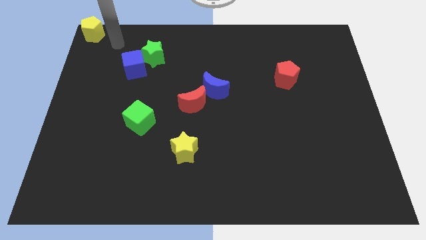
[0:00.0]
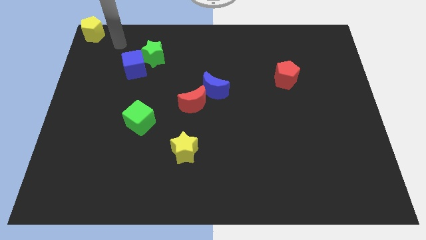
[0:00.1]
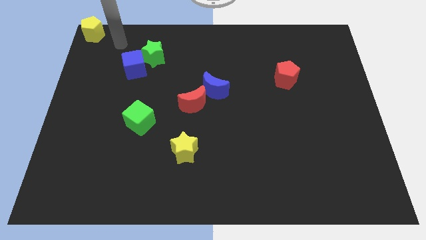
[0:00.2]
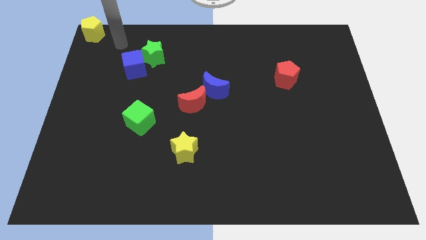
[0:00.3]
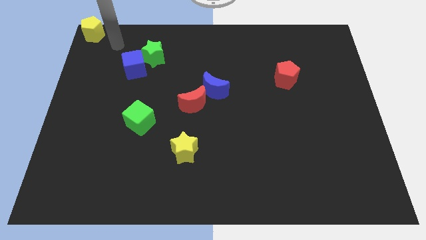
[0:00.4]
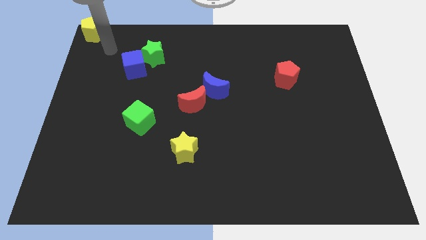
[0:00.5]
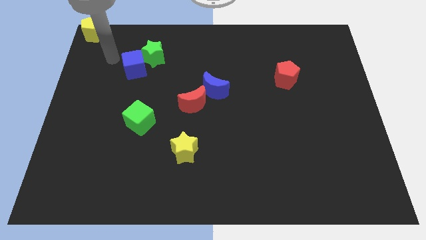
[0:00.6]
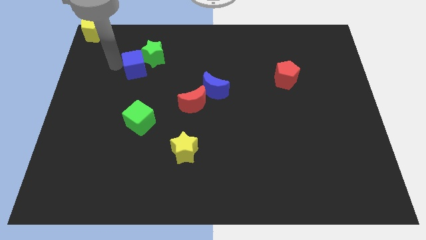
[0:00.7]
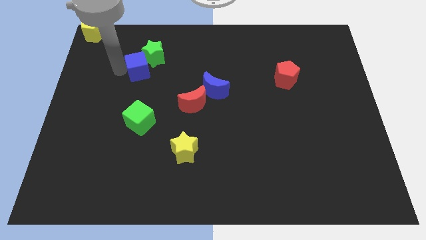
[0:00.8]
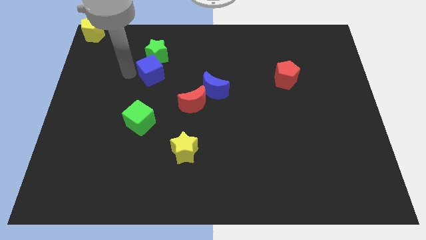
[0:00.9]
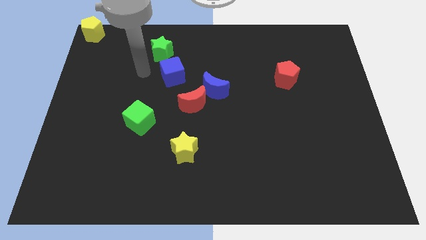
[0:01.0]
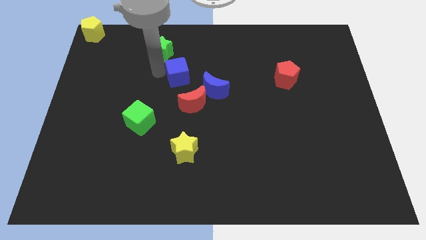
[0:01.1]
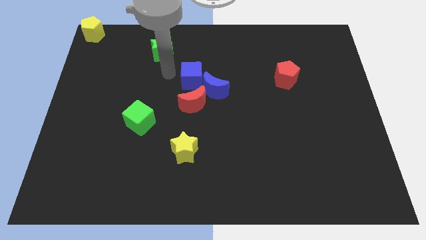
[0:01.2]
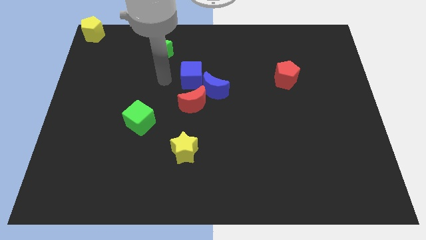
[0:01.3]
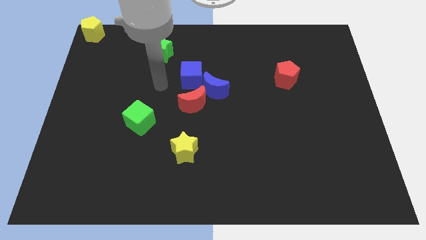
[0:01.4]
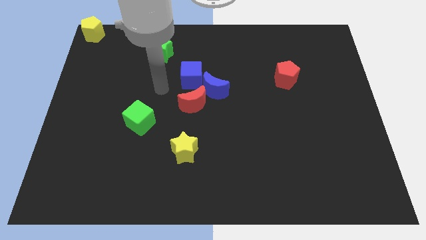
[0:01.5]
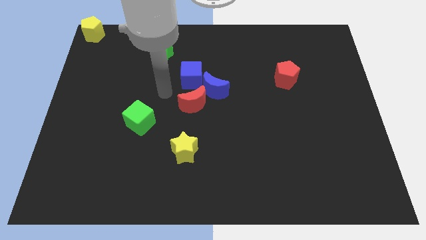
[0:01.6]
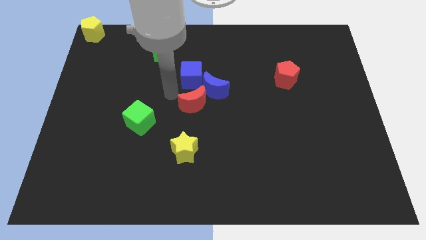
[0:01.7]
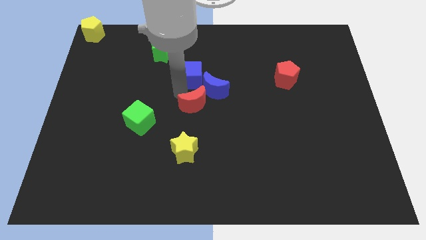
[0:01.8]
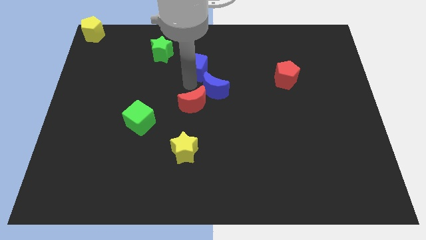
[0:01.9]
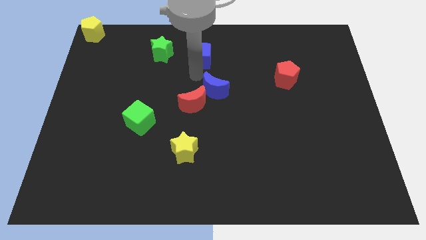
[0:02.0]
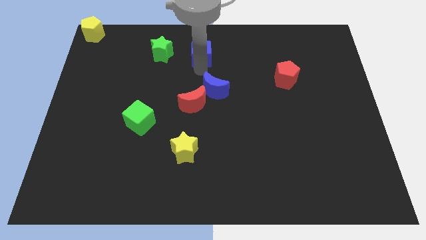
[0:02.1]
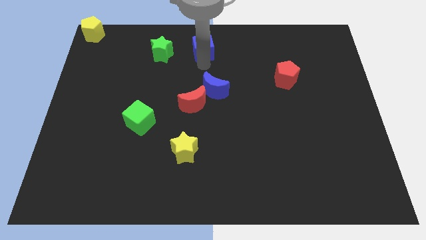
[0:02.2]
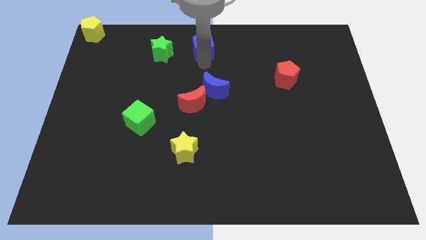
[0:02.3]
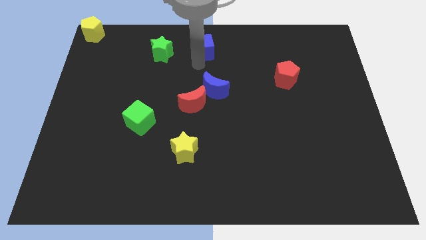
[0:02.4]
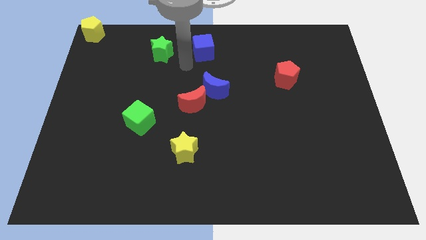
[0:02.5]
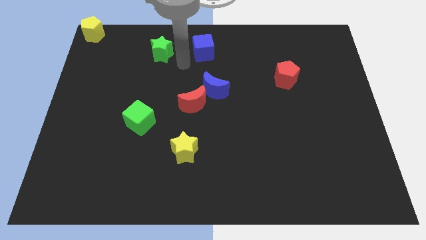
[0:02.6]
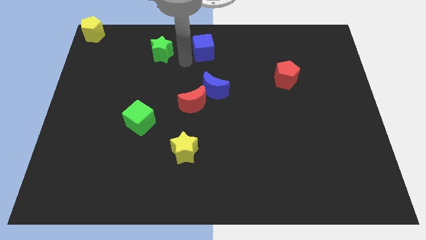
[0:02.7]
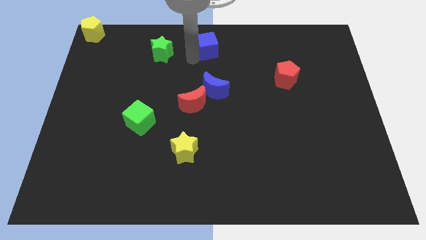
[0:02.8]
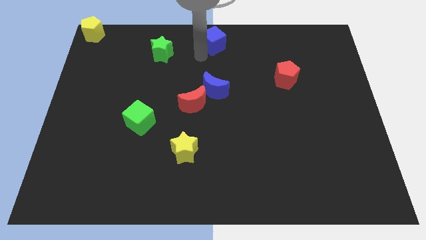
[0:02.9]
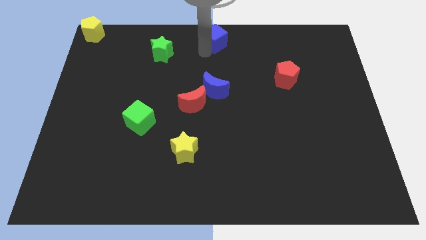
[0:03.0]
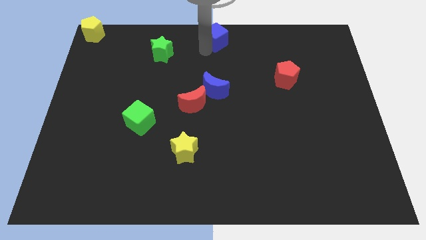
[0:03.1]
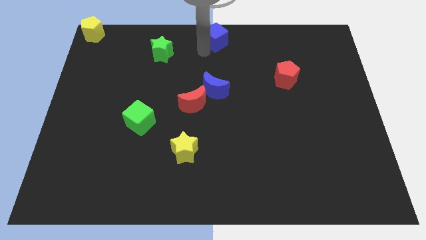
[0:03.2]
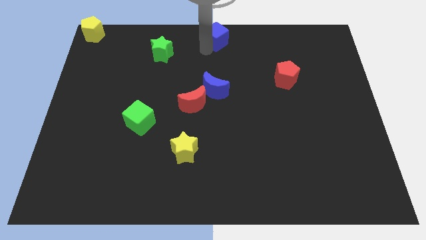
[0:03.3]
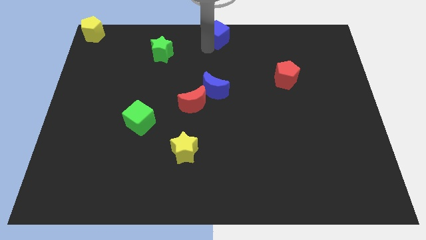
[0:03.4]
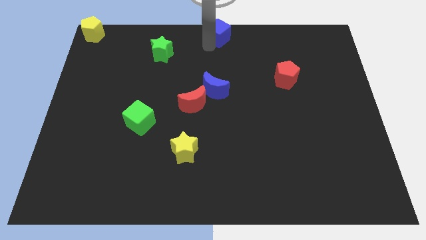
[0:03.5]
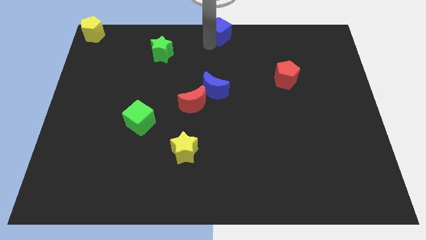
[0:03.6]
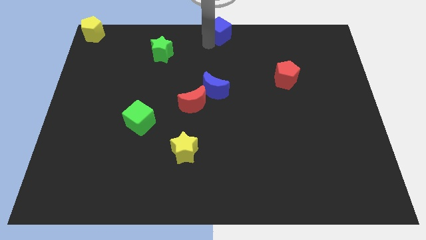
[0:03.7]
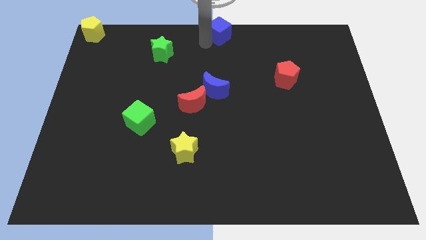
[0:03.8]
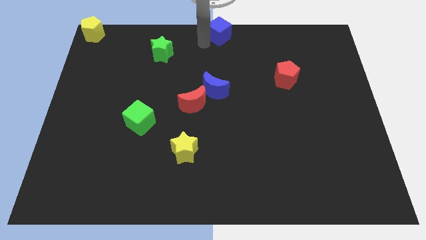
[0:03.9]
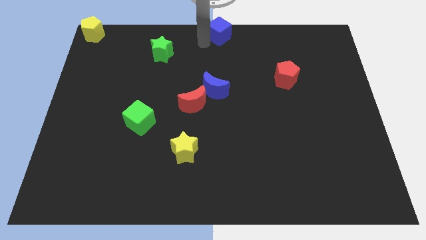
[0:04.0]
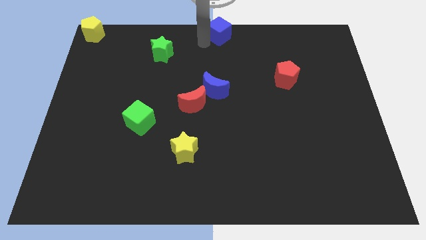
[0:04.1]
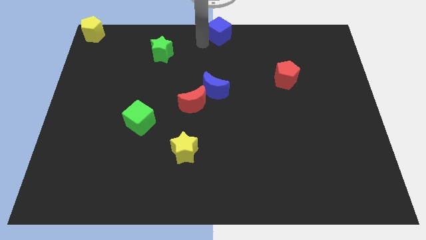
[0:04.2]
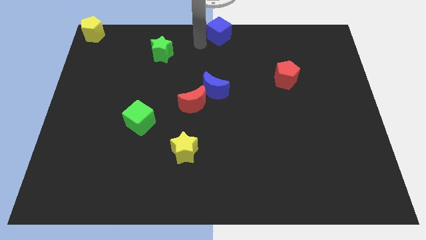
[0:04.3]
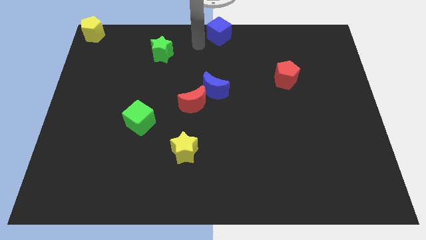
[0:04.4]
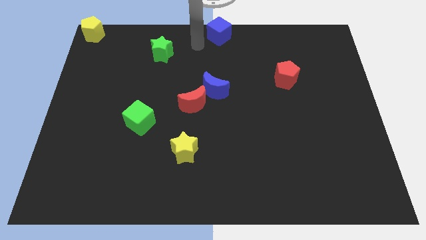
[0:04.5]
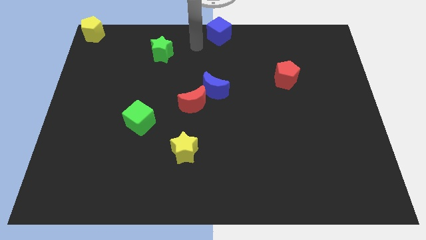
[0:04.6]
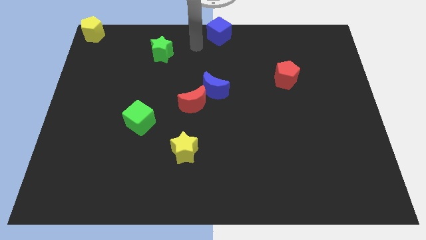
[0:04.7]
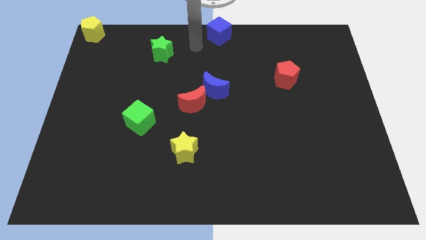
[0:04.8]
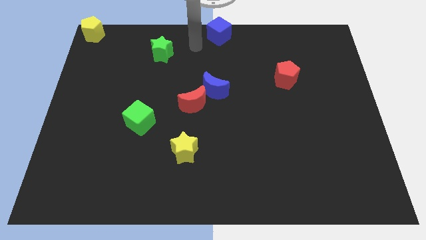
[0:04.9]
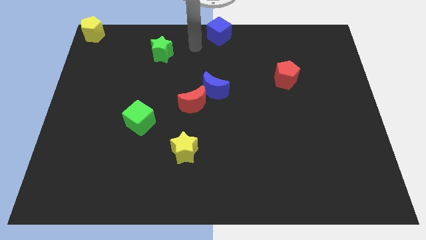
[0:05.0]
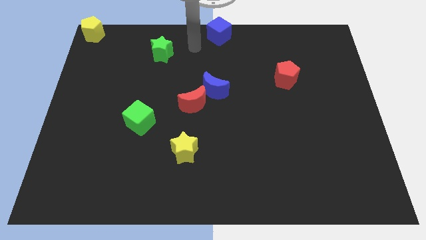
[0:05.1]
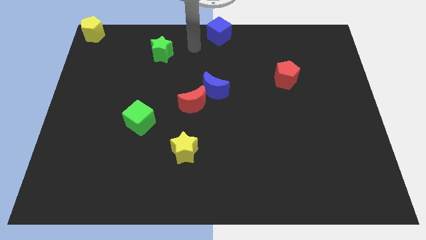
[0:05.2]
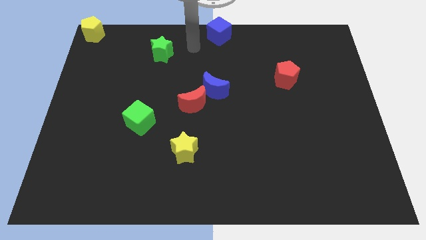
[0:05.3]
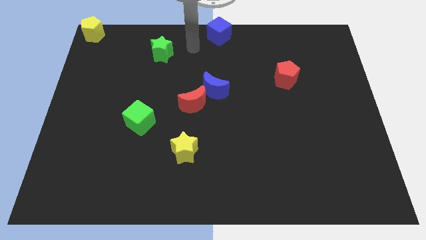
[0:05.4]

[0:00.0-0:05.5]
move the blue cube to the top center of the board

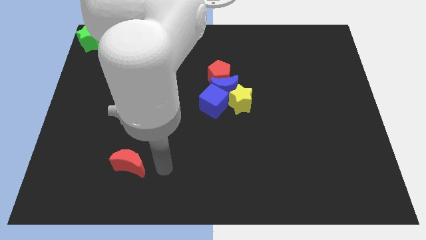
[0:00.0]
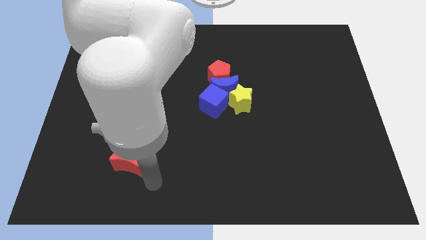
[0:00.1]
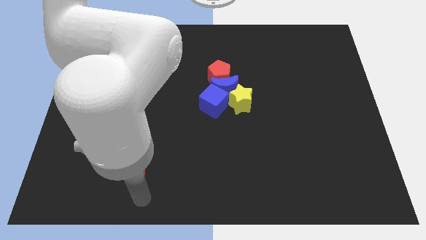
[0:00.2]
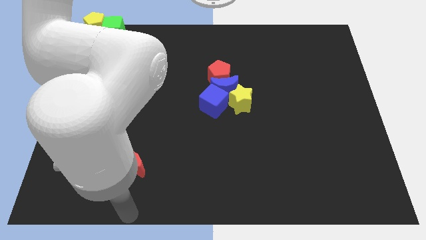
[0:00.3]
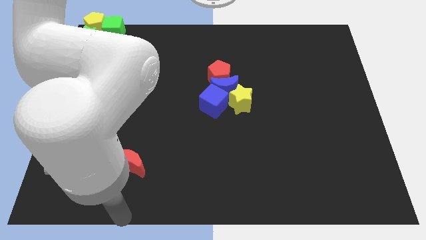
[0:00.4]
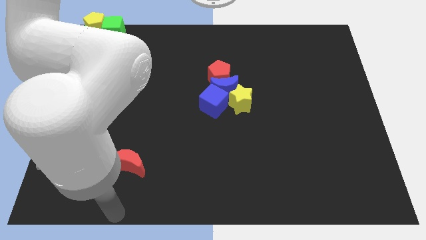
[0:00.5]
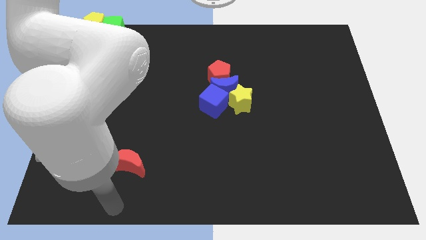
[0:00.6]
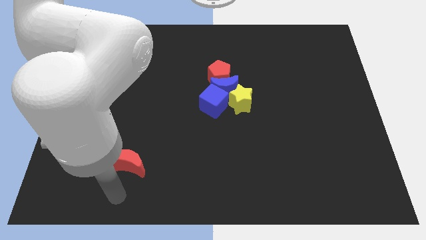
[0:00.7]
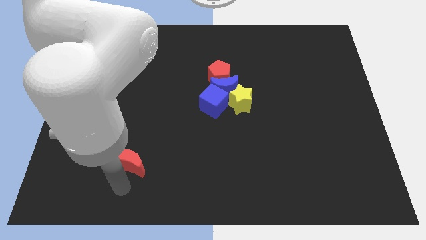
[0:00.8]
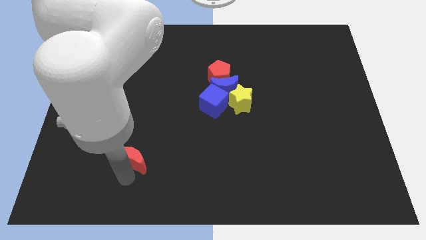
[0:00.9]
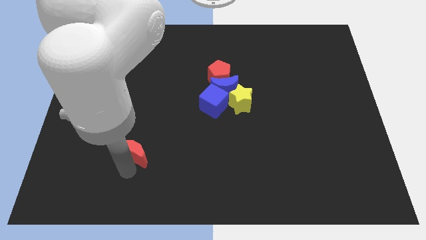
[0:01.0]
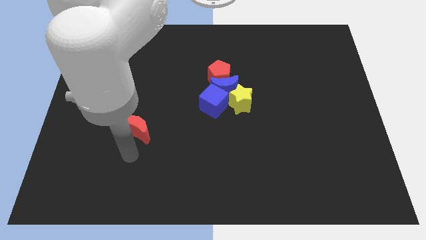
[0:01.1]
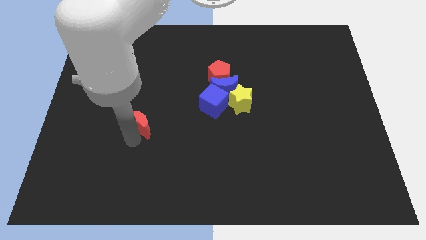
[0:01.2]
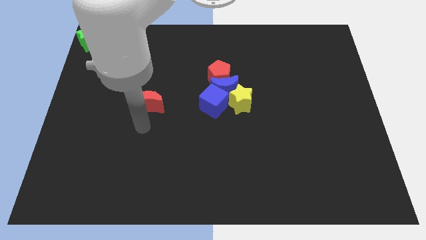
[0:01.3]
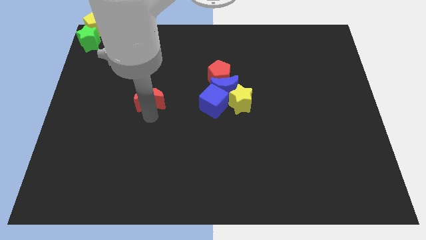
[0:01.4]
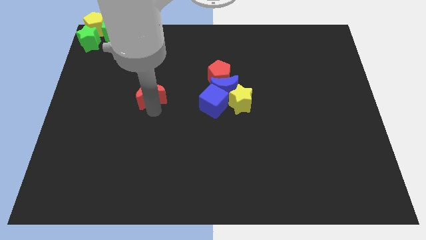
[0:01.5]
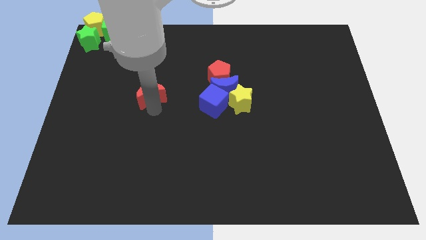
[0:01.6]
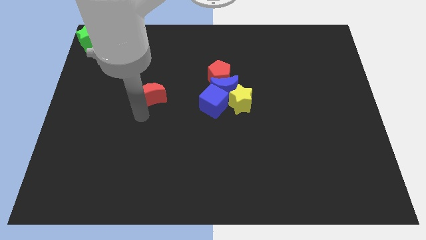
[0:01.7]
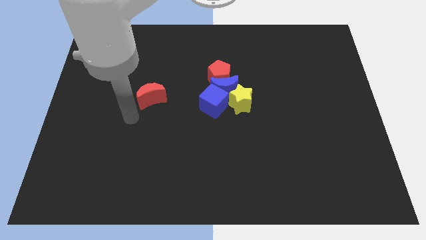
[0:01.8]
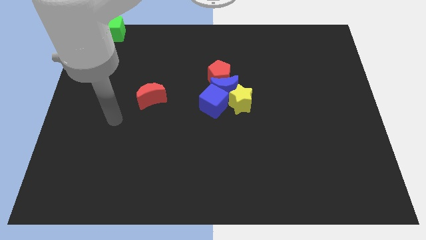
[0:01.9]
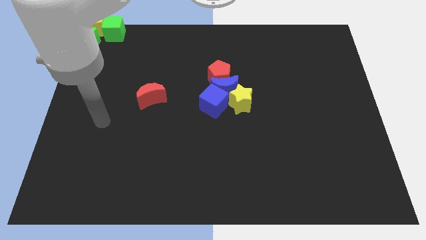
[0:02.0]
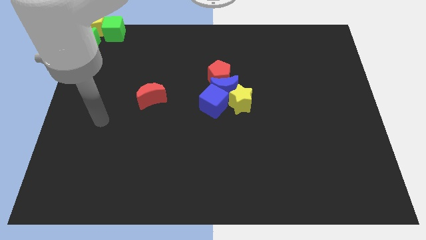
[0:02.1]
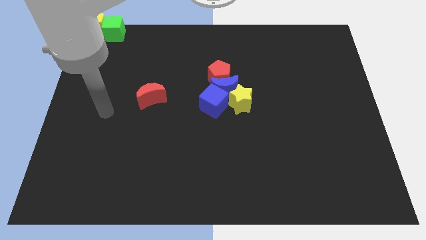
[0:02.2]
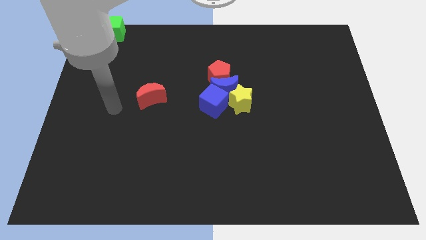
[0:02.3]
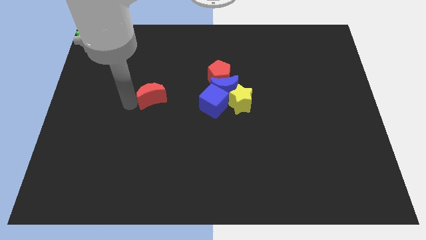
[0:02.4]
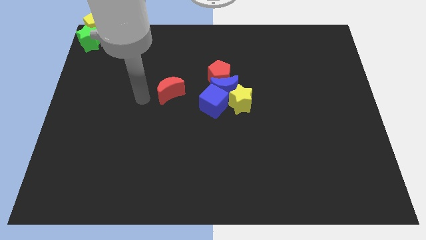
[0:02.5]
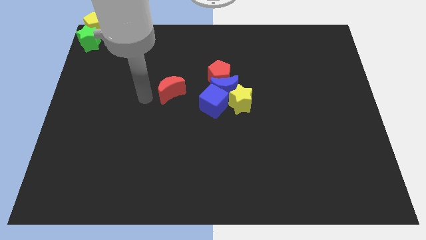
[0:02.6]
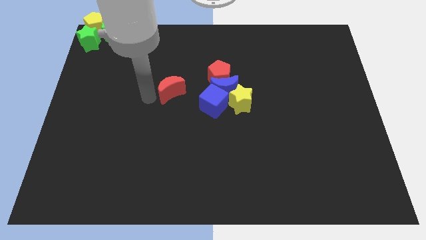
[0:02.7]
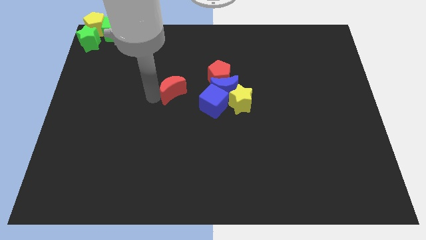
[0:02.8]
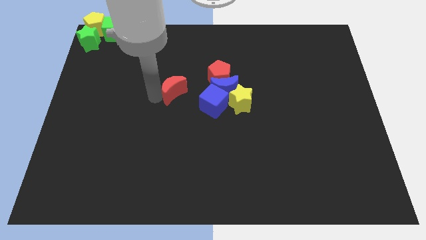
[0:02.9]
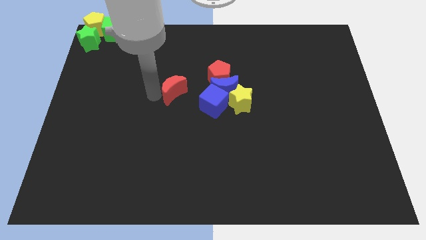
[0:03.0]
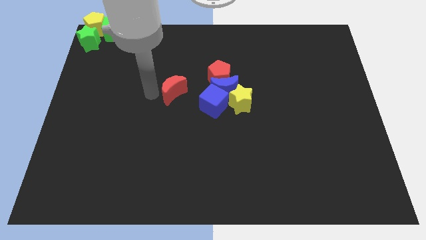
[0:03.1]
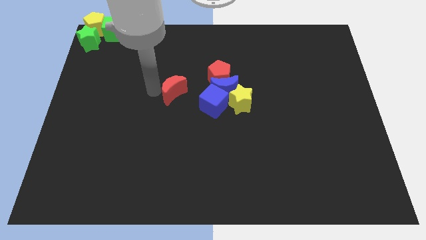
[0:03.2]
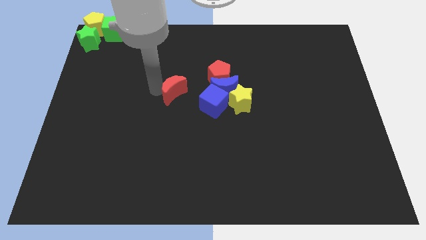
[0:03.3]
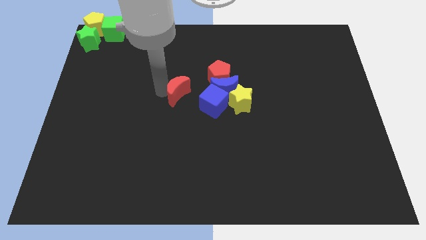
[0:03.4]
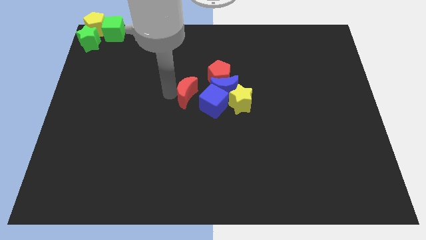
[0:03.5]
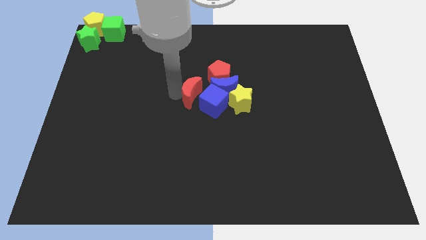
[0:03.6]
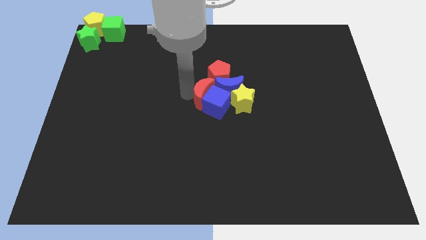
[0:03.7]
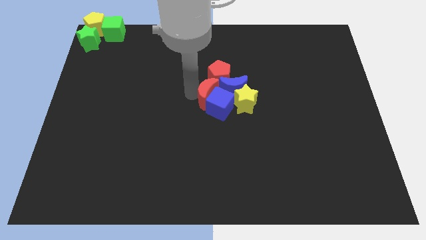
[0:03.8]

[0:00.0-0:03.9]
move the red moon into the group of blocks
